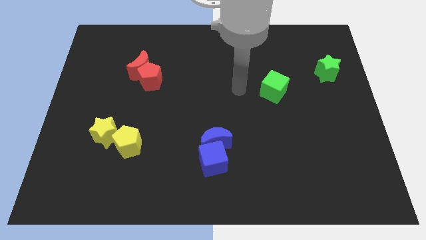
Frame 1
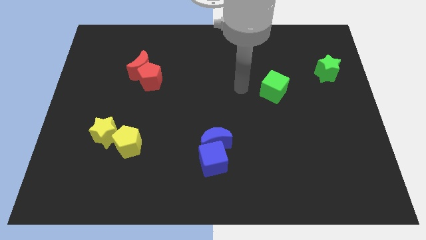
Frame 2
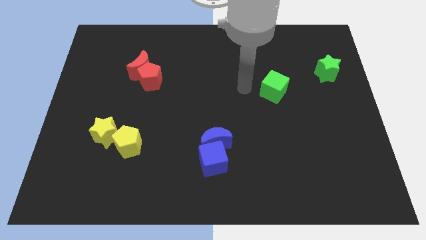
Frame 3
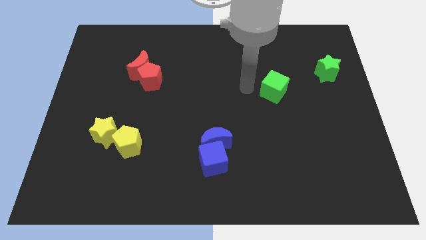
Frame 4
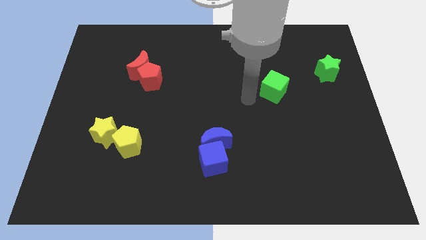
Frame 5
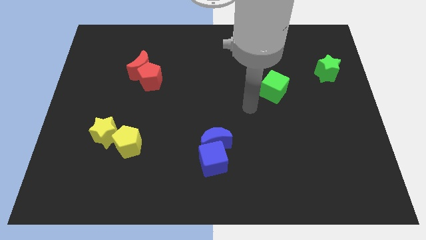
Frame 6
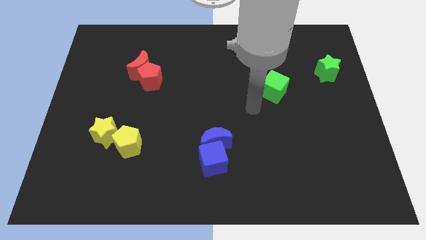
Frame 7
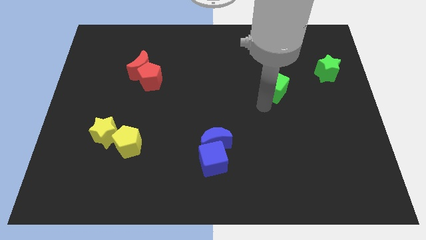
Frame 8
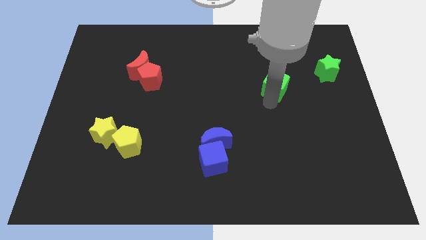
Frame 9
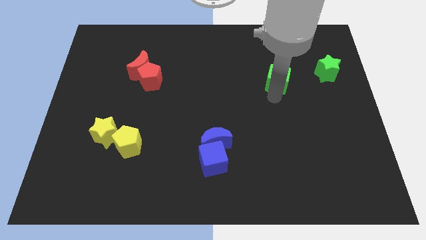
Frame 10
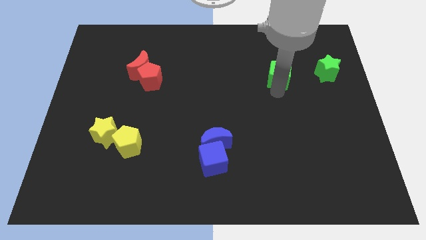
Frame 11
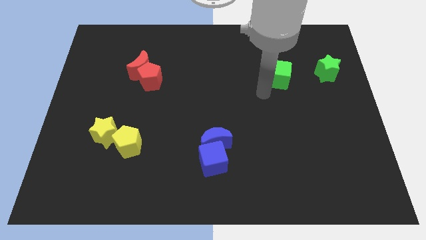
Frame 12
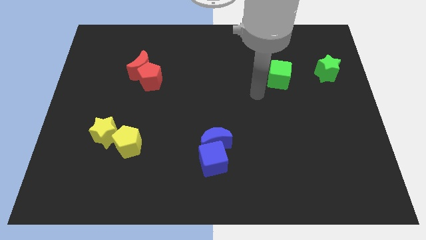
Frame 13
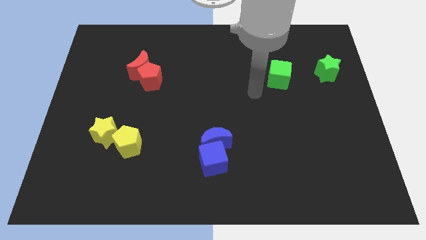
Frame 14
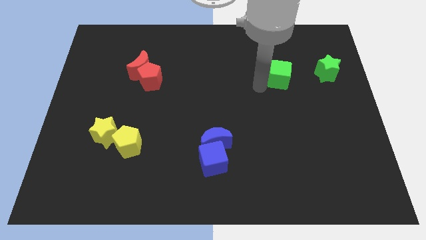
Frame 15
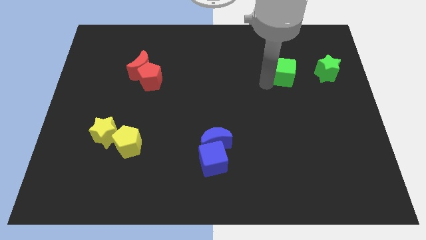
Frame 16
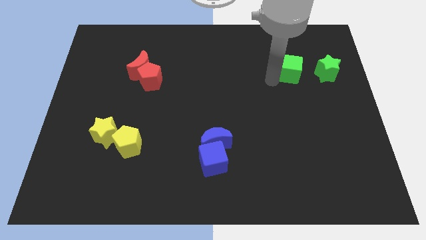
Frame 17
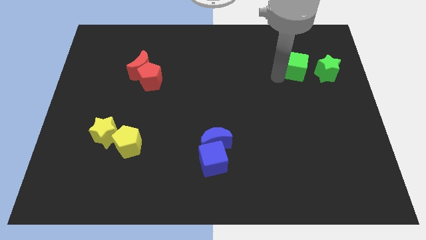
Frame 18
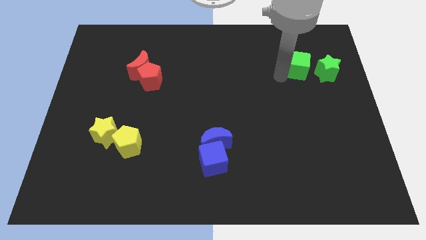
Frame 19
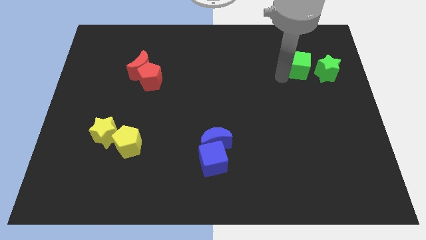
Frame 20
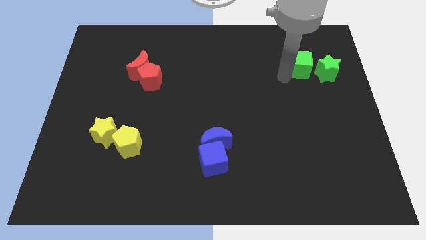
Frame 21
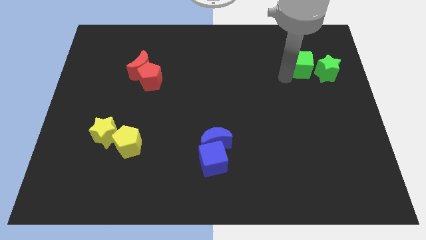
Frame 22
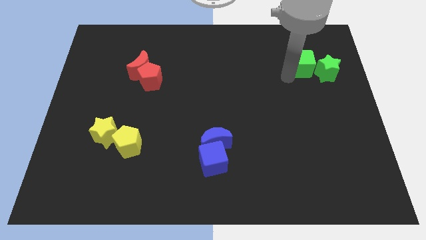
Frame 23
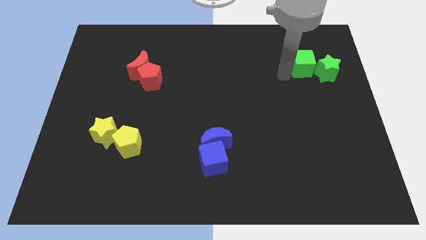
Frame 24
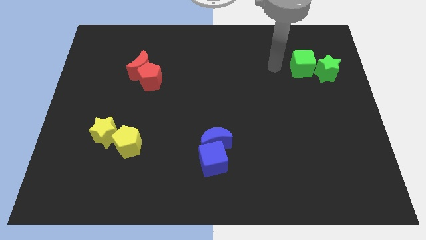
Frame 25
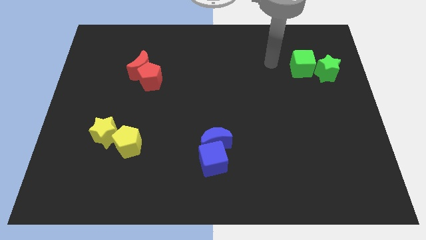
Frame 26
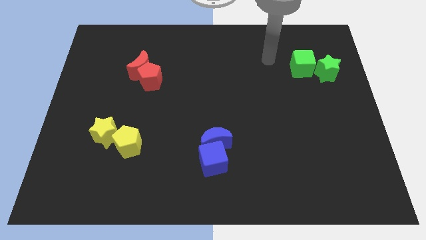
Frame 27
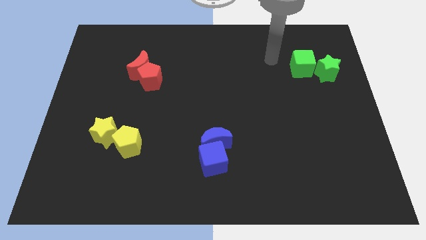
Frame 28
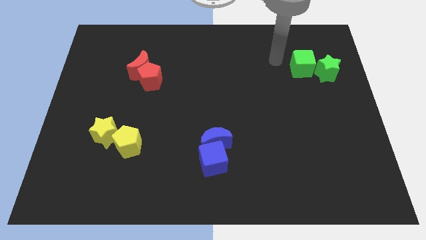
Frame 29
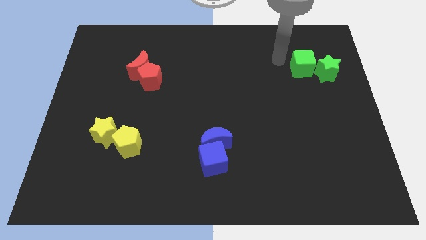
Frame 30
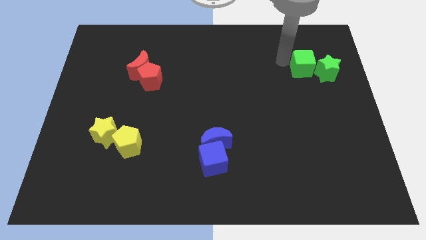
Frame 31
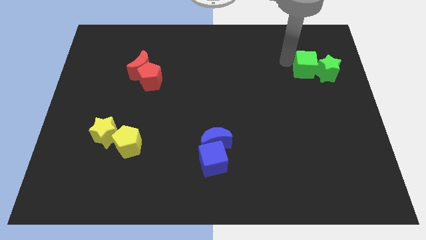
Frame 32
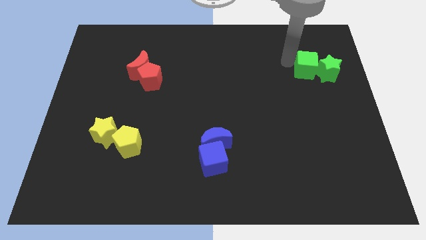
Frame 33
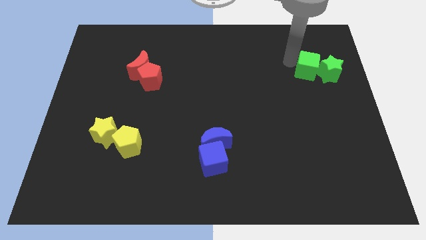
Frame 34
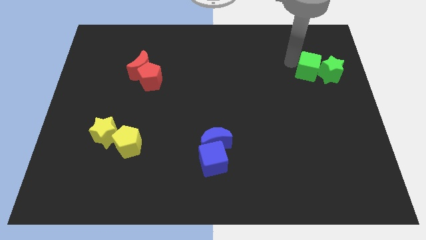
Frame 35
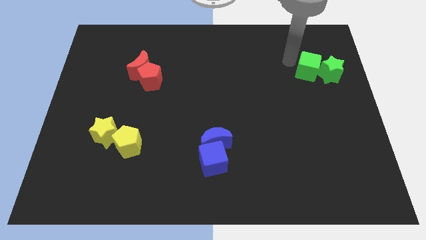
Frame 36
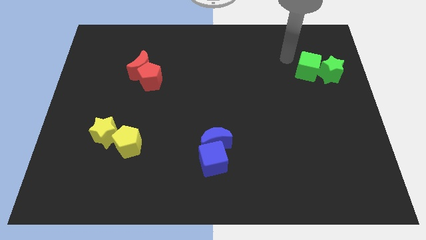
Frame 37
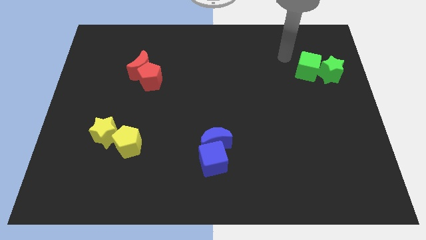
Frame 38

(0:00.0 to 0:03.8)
move the green cube into the left side of the green star

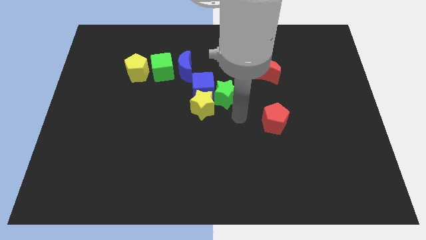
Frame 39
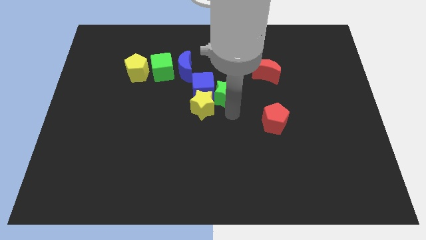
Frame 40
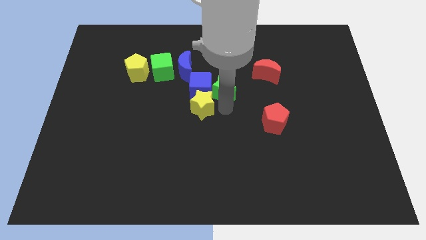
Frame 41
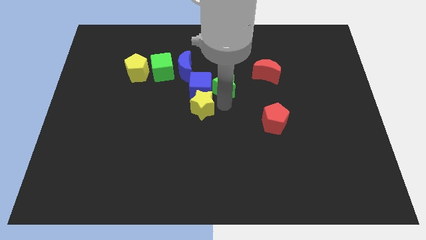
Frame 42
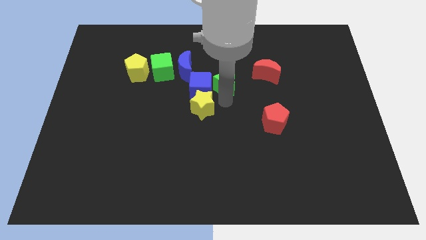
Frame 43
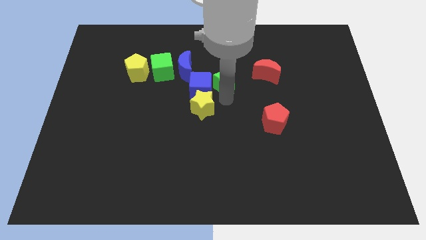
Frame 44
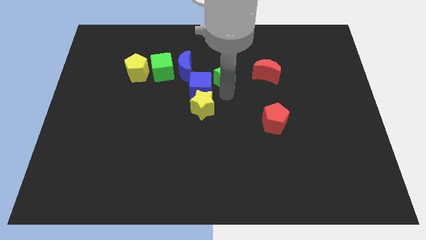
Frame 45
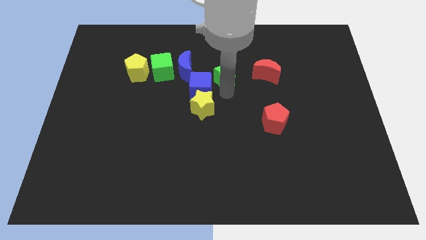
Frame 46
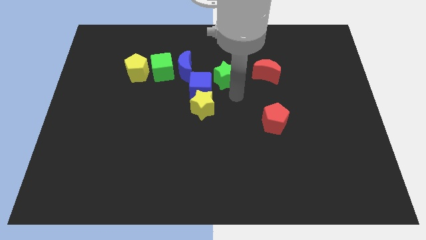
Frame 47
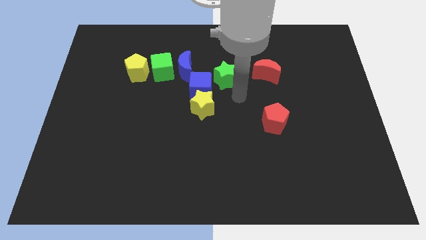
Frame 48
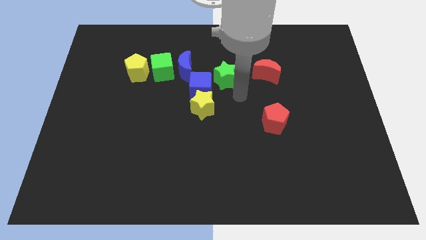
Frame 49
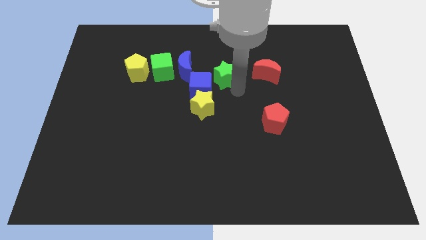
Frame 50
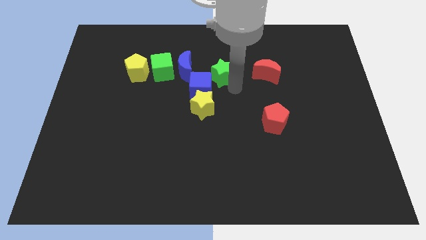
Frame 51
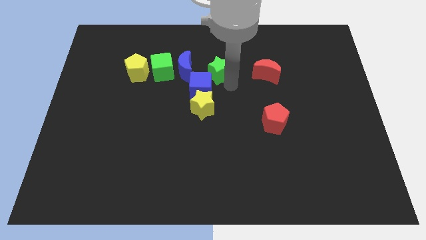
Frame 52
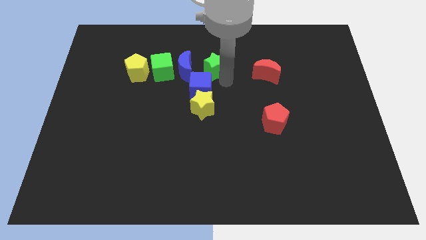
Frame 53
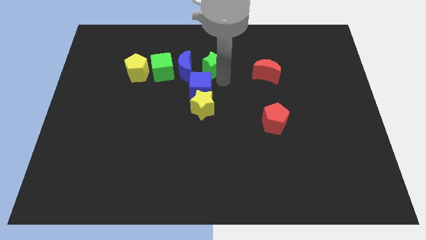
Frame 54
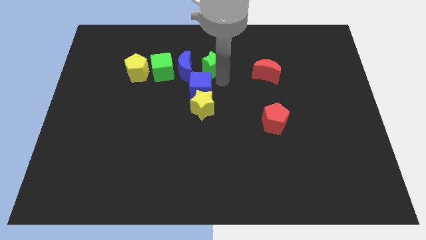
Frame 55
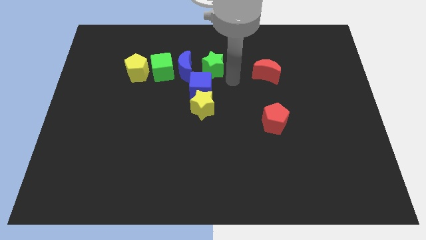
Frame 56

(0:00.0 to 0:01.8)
push the green star to the top right of the blue crescent

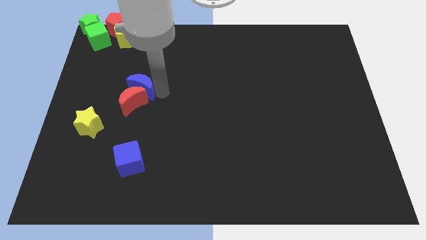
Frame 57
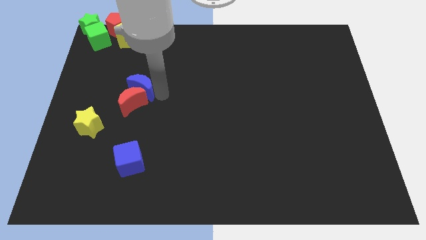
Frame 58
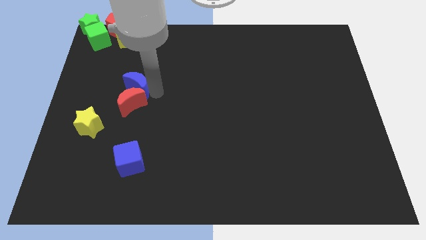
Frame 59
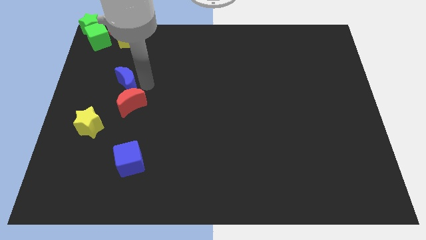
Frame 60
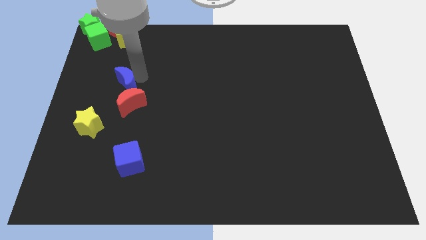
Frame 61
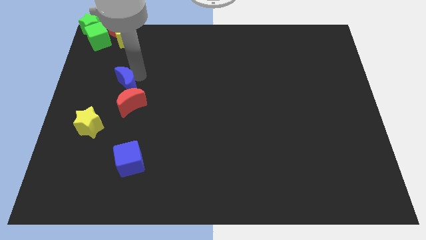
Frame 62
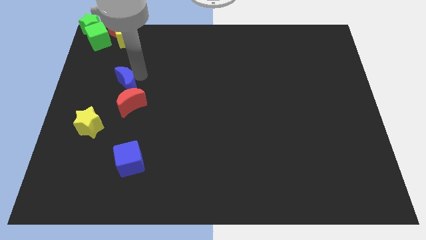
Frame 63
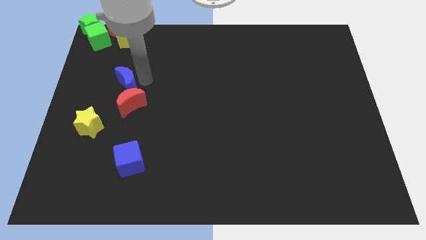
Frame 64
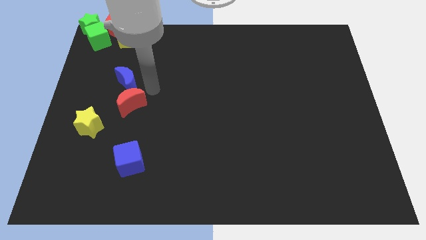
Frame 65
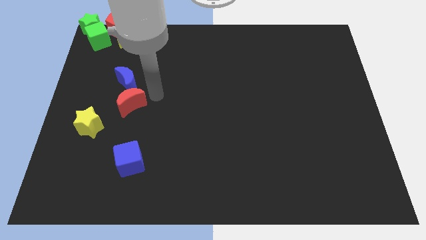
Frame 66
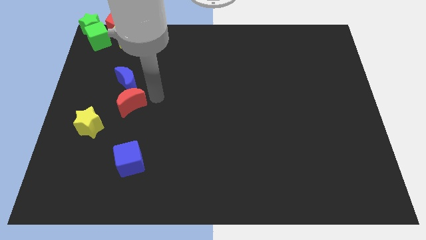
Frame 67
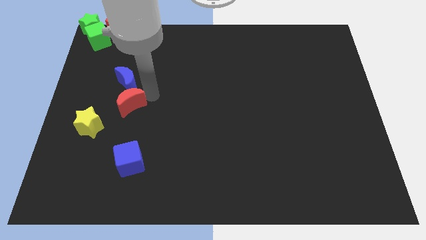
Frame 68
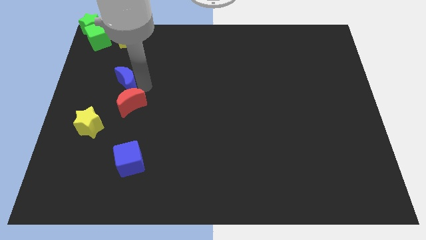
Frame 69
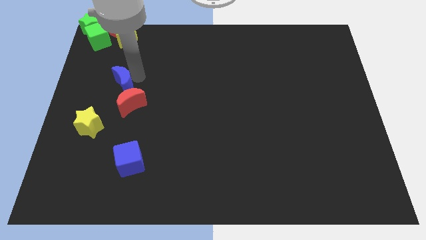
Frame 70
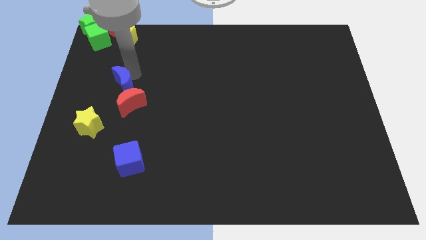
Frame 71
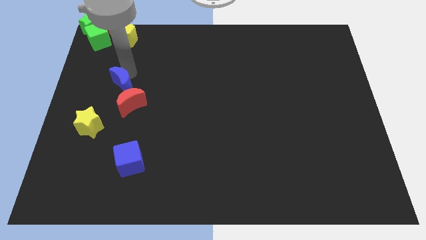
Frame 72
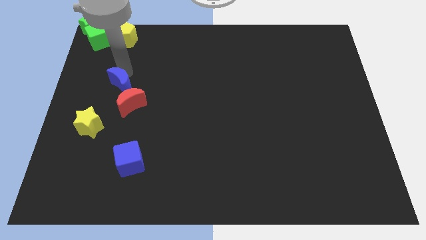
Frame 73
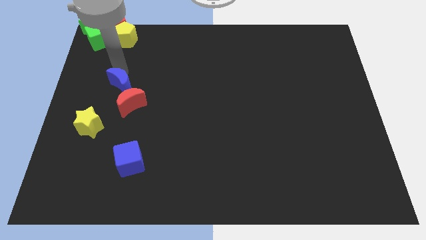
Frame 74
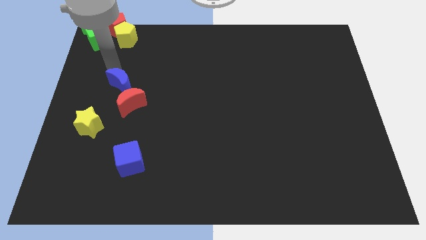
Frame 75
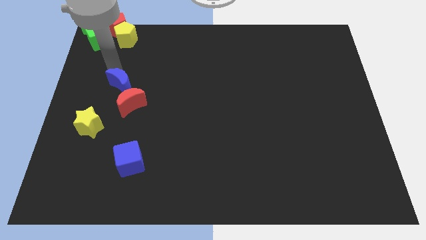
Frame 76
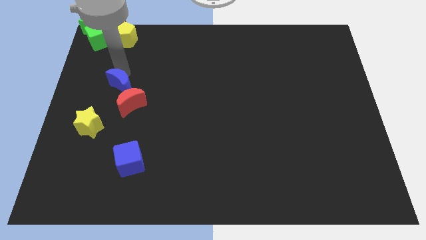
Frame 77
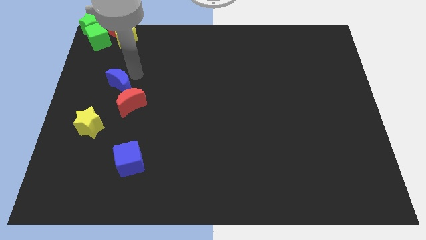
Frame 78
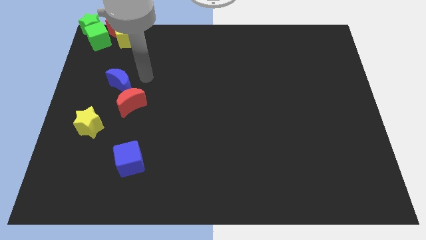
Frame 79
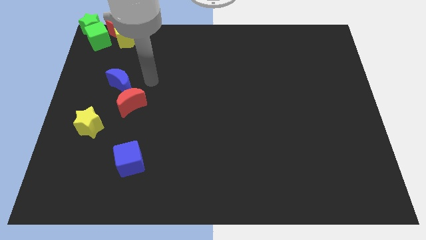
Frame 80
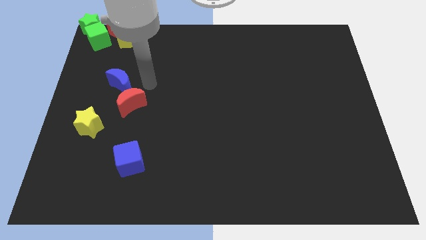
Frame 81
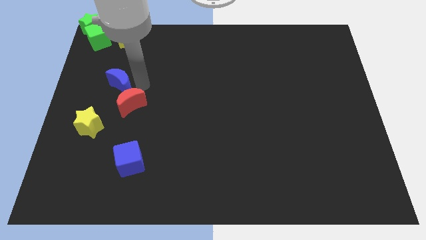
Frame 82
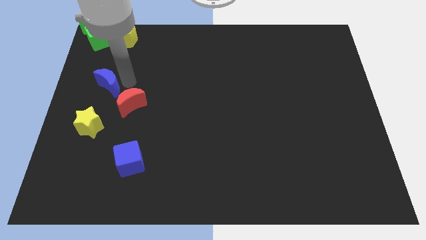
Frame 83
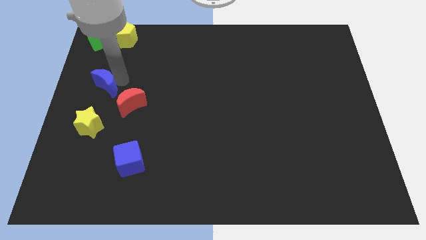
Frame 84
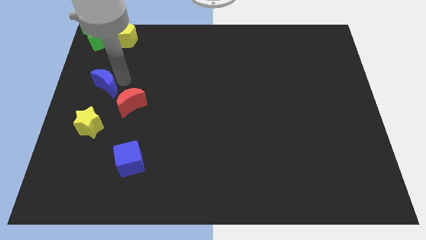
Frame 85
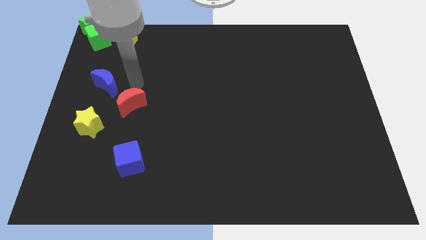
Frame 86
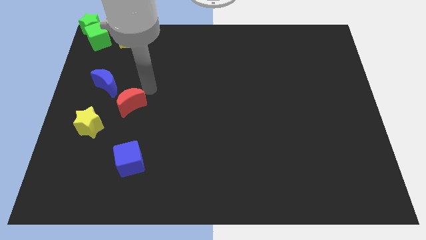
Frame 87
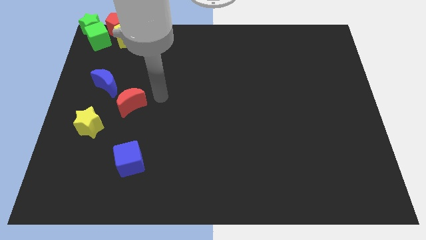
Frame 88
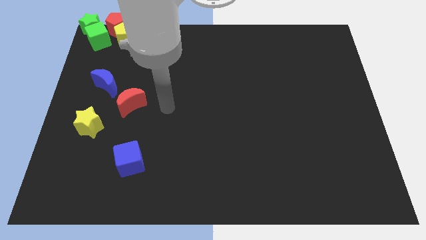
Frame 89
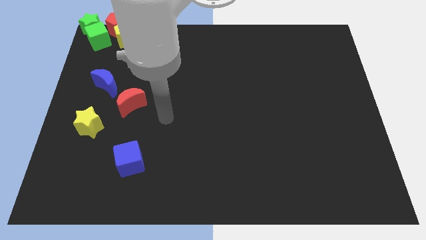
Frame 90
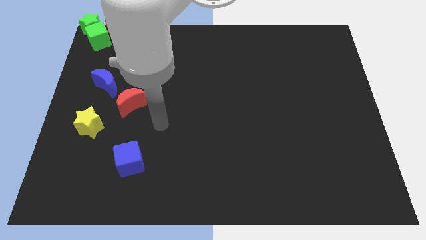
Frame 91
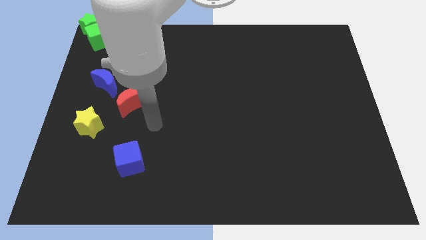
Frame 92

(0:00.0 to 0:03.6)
separate blue crescent from the red crescent
